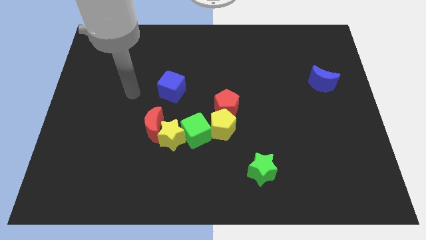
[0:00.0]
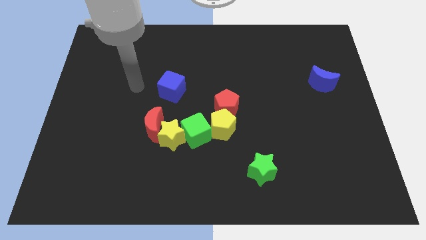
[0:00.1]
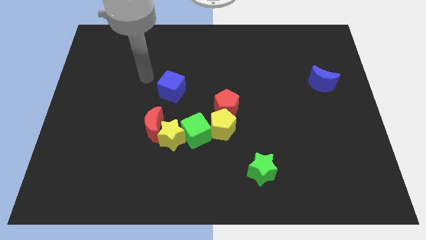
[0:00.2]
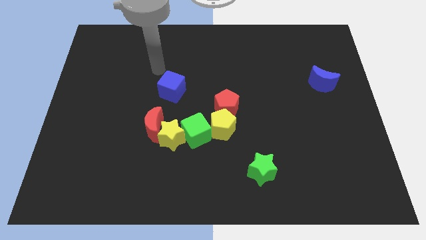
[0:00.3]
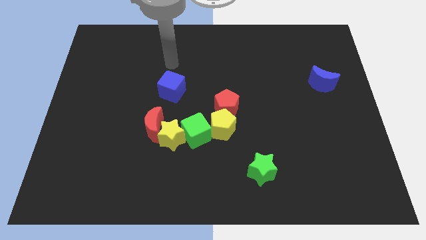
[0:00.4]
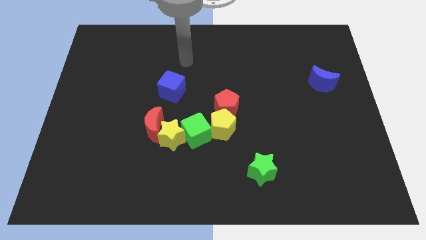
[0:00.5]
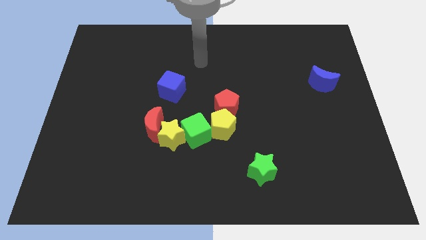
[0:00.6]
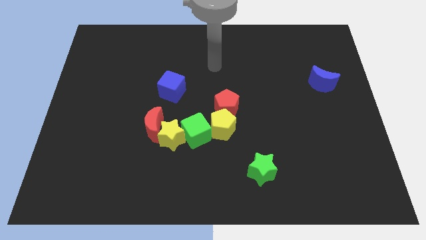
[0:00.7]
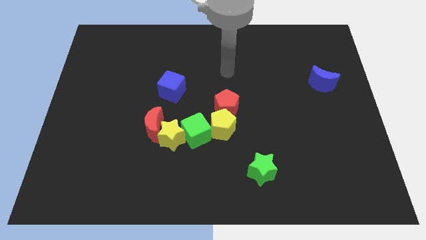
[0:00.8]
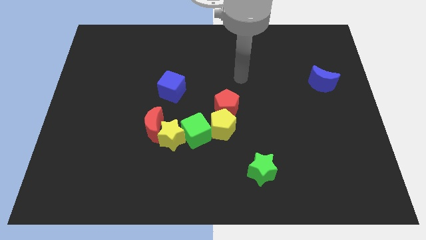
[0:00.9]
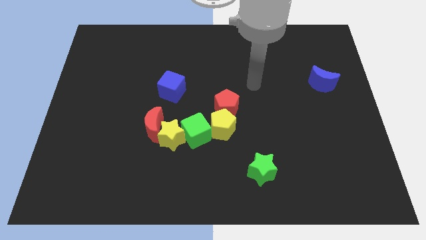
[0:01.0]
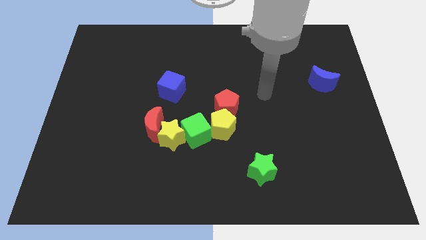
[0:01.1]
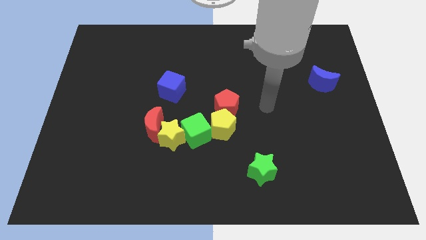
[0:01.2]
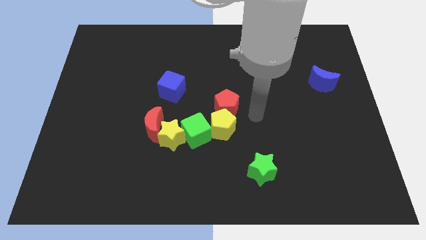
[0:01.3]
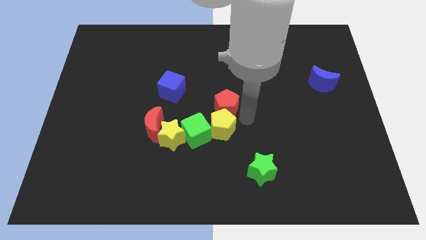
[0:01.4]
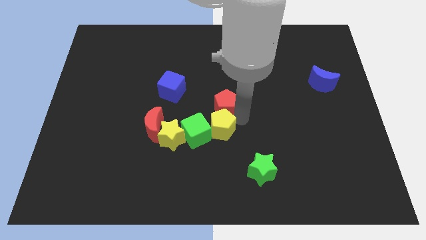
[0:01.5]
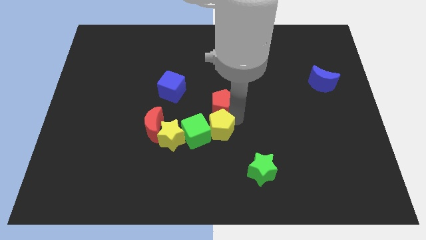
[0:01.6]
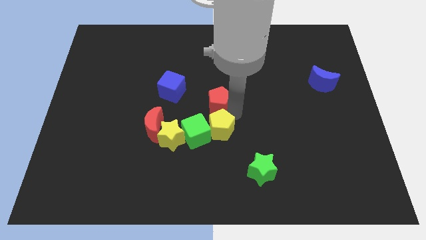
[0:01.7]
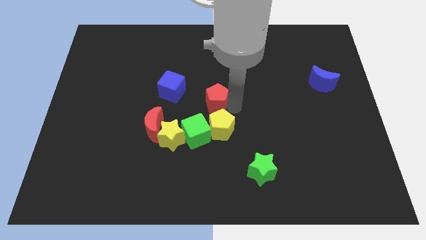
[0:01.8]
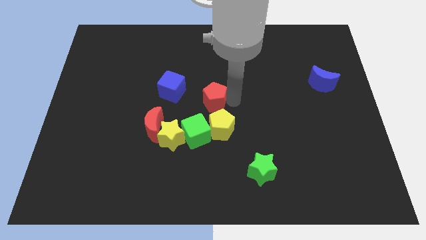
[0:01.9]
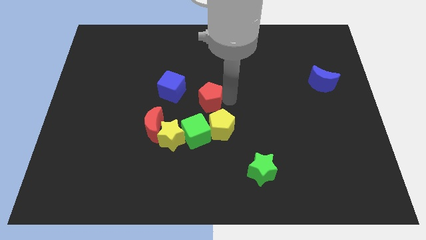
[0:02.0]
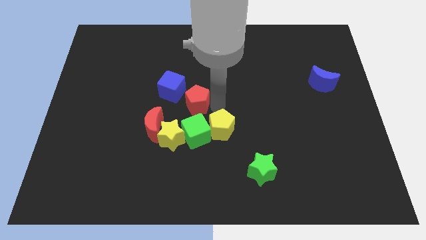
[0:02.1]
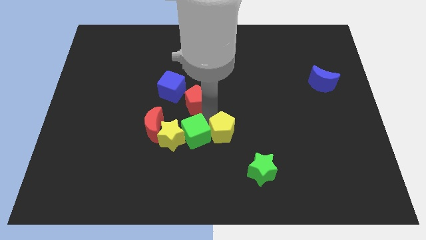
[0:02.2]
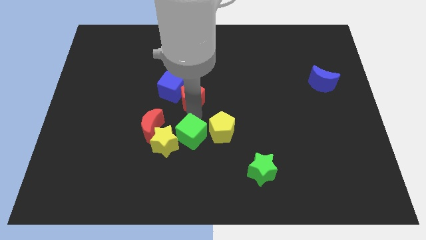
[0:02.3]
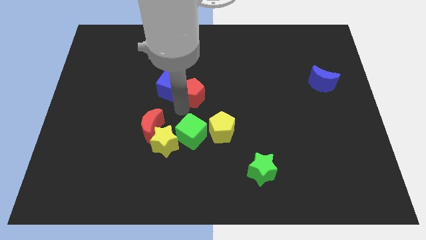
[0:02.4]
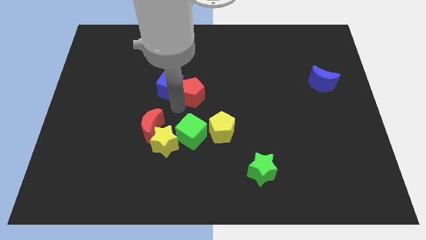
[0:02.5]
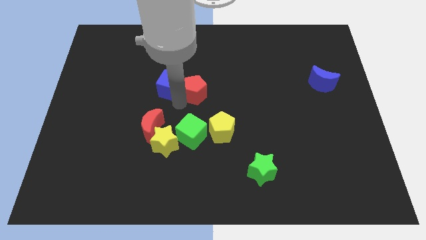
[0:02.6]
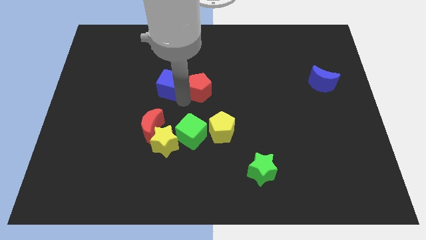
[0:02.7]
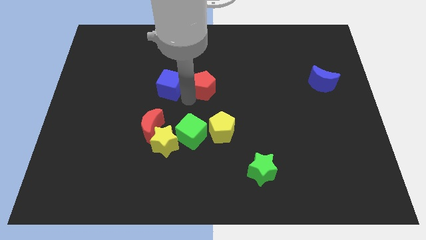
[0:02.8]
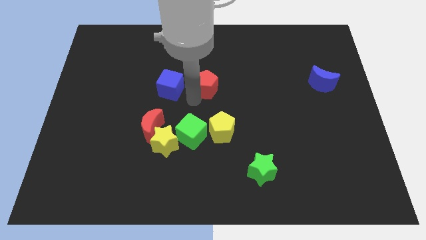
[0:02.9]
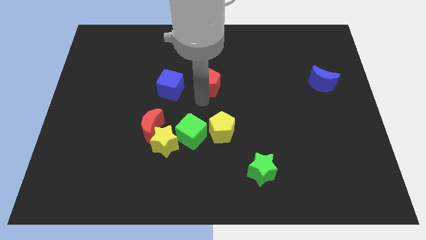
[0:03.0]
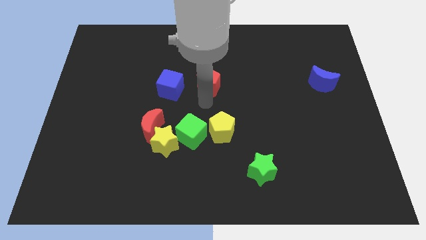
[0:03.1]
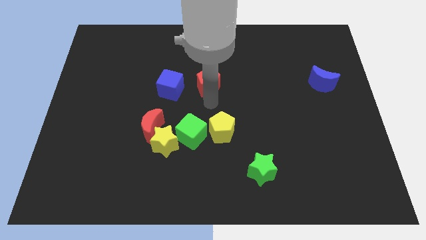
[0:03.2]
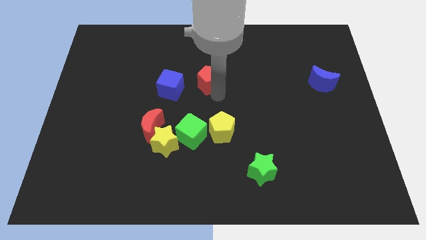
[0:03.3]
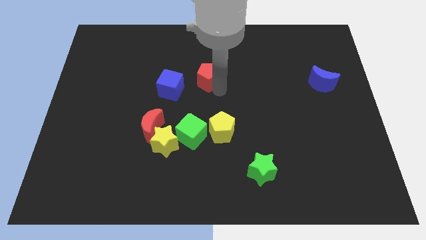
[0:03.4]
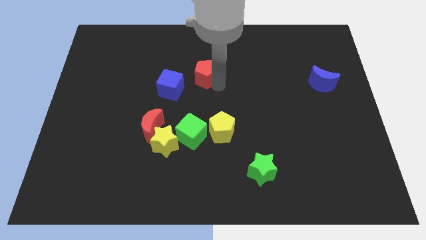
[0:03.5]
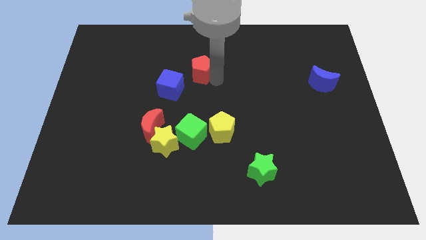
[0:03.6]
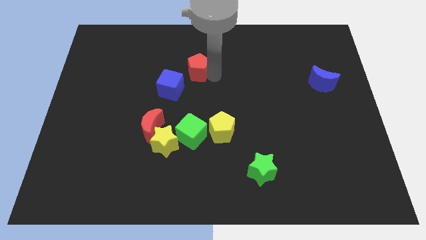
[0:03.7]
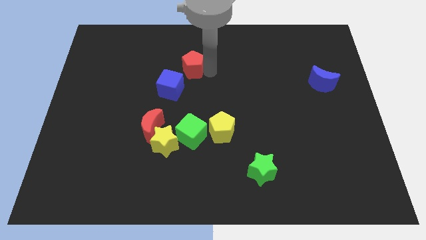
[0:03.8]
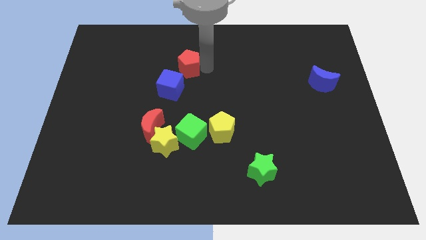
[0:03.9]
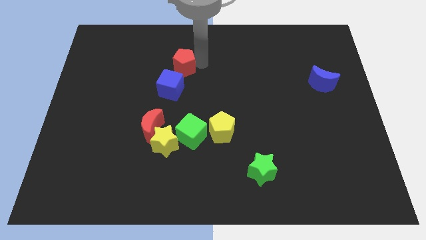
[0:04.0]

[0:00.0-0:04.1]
move red pentagon to top right of blue cube

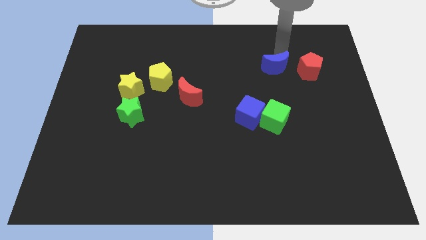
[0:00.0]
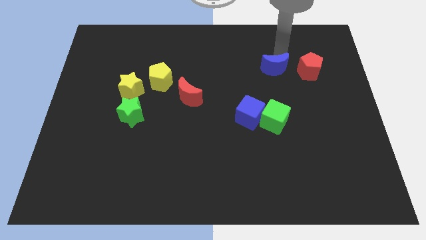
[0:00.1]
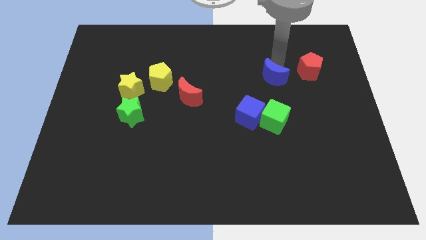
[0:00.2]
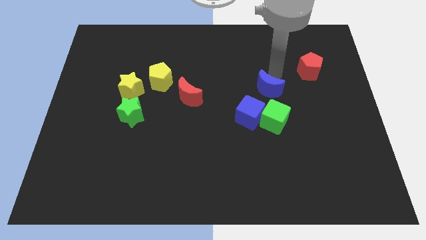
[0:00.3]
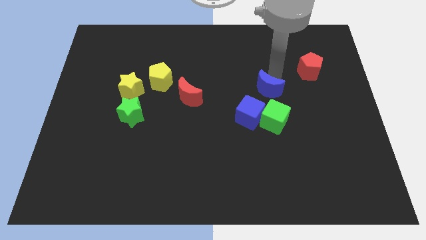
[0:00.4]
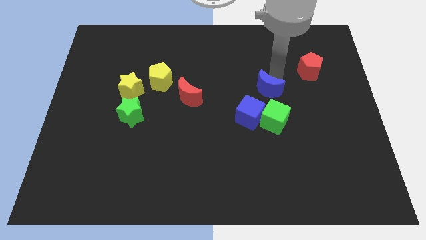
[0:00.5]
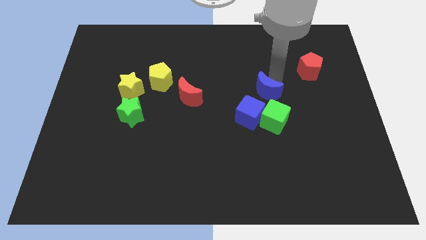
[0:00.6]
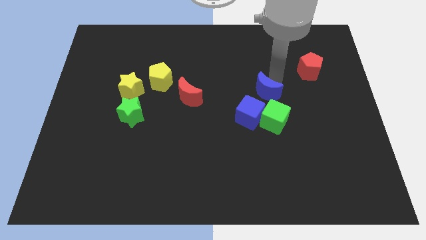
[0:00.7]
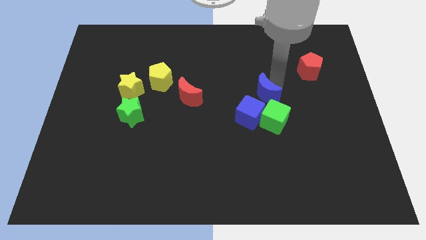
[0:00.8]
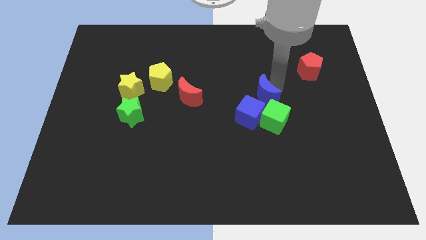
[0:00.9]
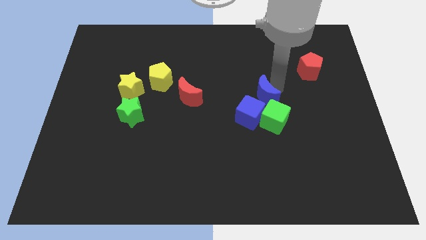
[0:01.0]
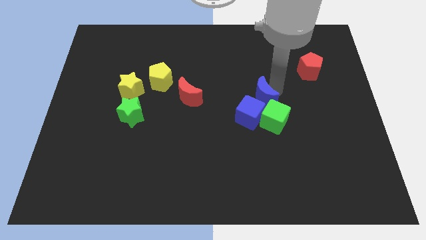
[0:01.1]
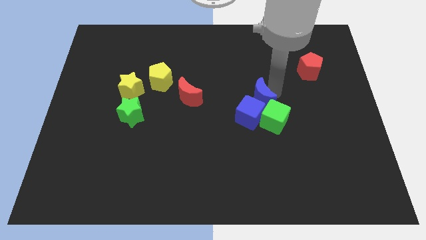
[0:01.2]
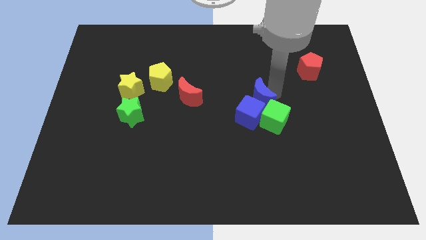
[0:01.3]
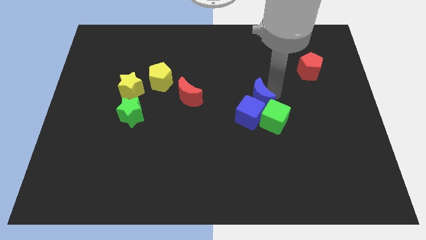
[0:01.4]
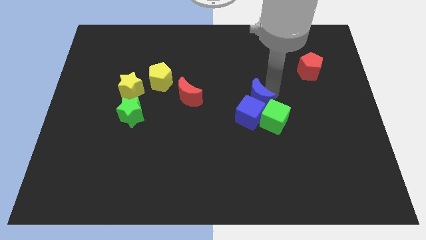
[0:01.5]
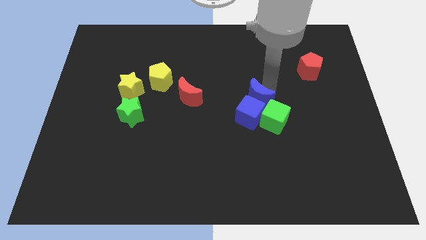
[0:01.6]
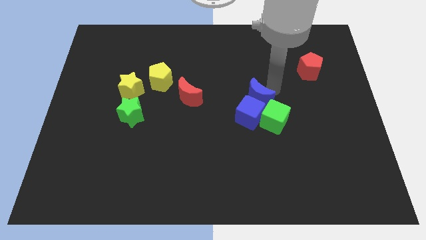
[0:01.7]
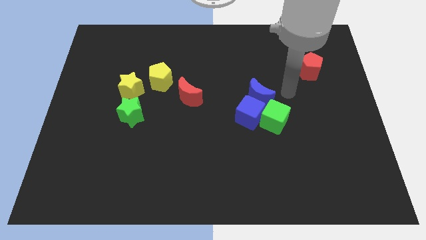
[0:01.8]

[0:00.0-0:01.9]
slide the blue moon into the blue cube

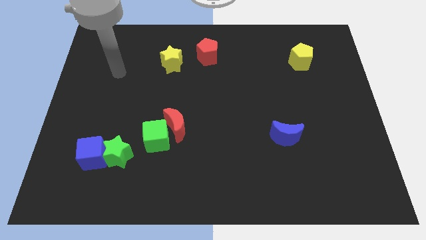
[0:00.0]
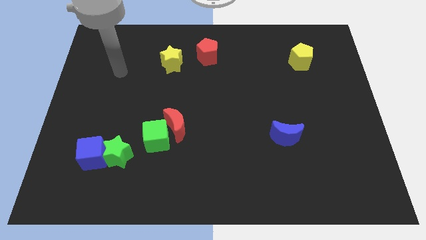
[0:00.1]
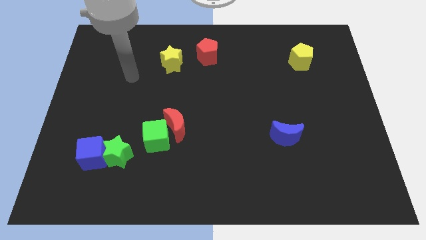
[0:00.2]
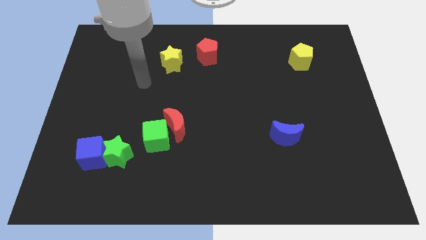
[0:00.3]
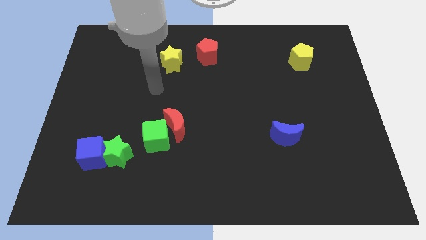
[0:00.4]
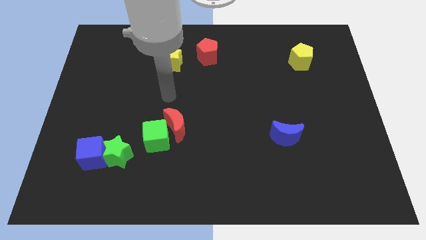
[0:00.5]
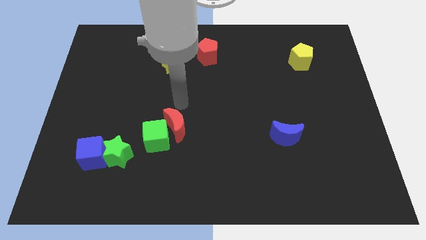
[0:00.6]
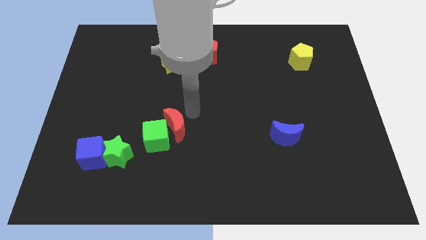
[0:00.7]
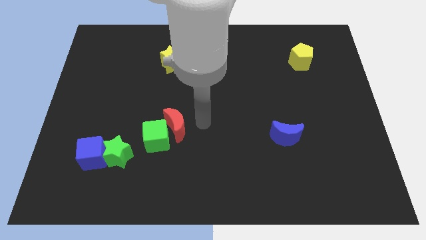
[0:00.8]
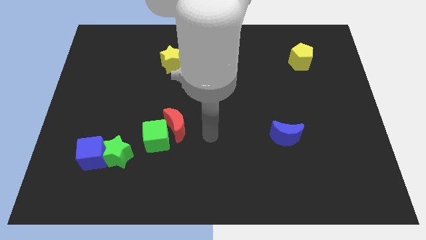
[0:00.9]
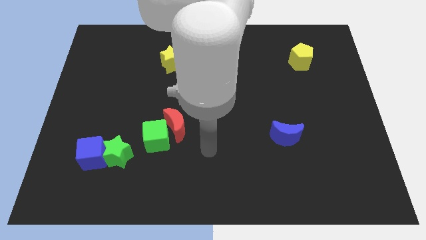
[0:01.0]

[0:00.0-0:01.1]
place the arm to the bottom right of the red moon

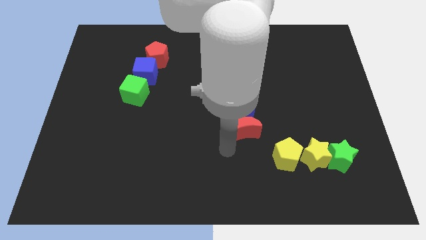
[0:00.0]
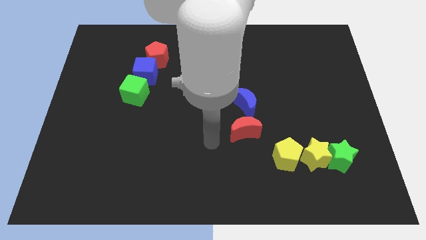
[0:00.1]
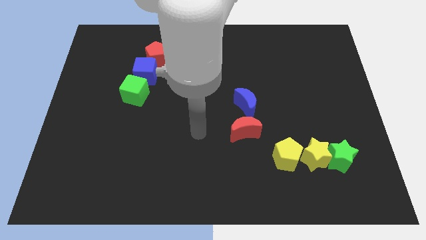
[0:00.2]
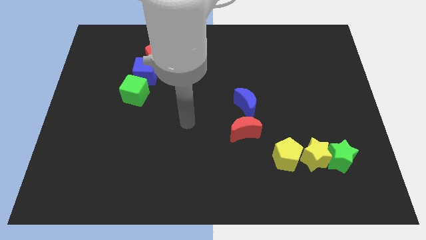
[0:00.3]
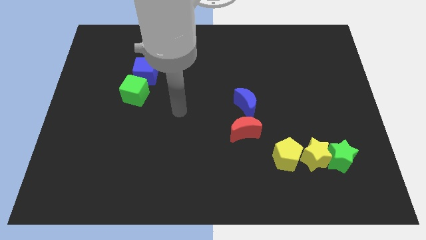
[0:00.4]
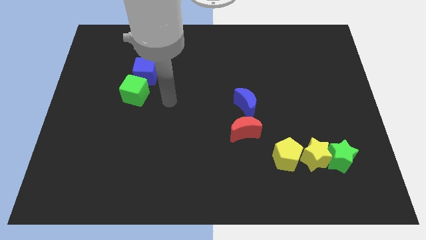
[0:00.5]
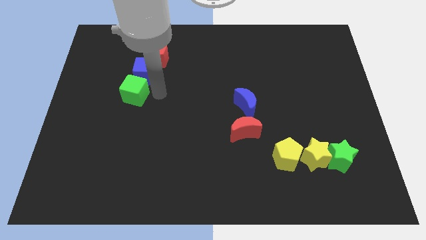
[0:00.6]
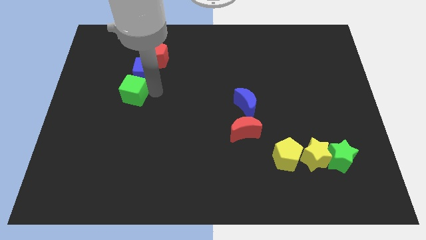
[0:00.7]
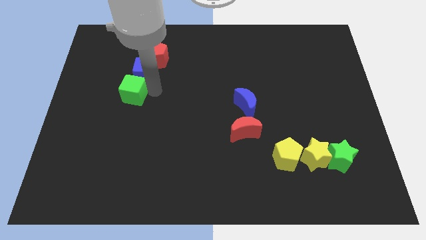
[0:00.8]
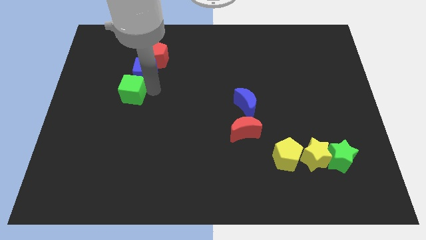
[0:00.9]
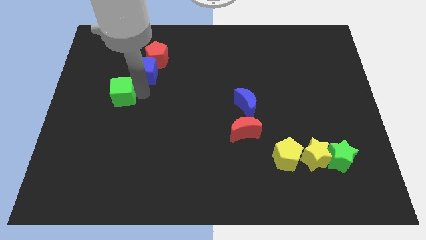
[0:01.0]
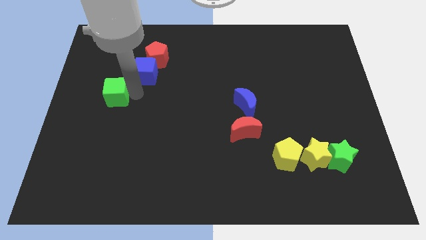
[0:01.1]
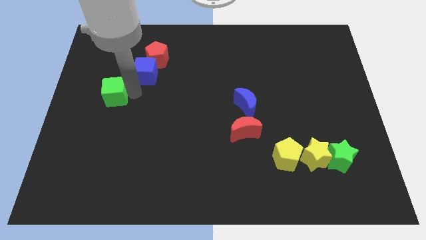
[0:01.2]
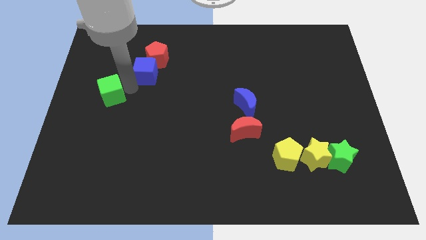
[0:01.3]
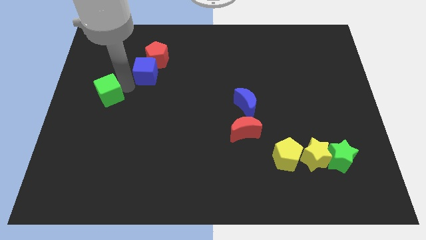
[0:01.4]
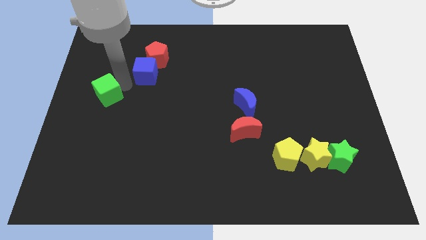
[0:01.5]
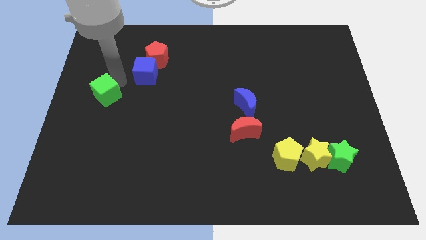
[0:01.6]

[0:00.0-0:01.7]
slide the green cube slightly to the left

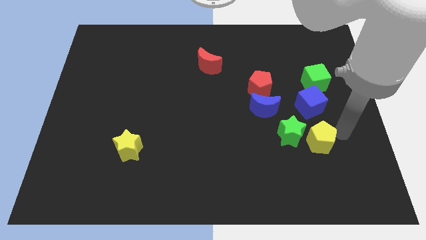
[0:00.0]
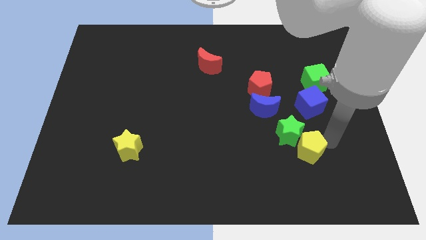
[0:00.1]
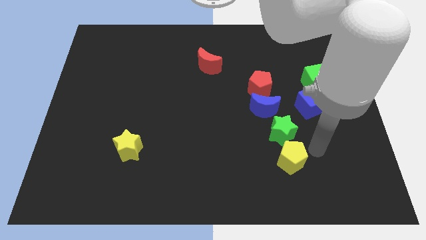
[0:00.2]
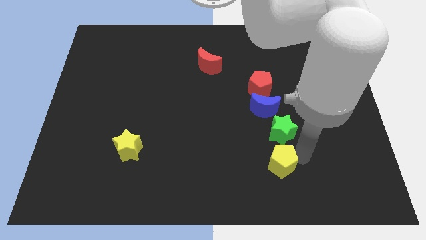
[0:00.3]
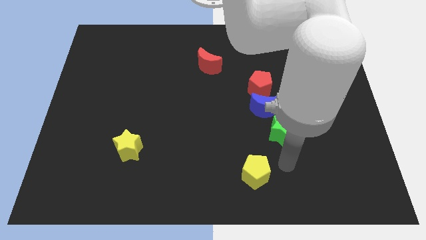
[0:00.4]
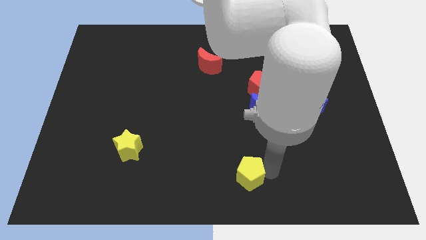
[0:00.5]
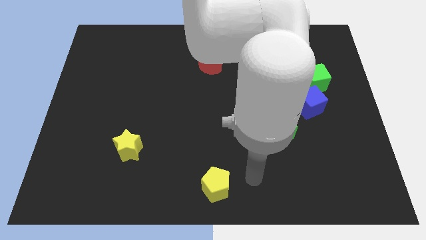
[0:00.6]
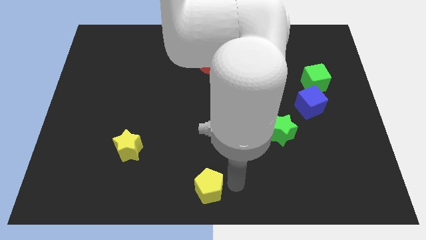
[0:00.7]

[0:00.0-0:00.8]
push the yellow pentagon downward
